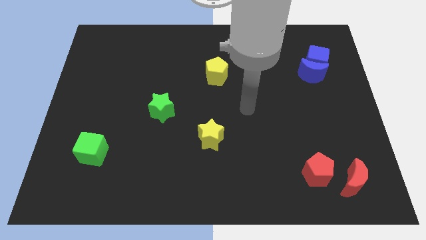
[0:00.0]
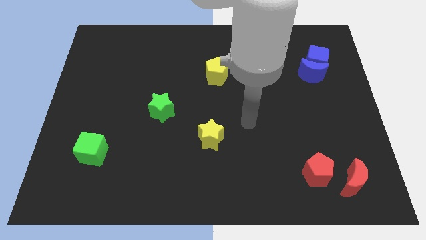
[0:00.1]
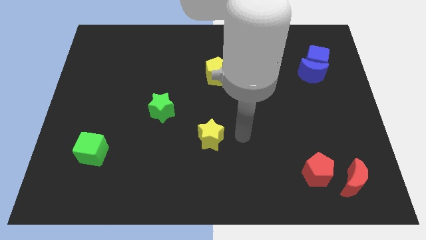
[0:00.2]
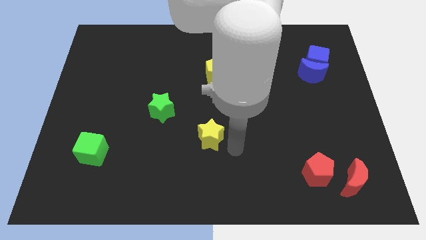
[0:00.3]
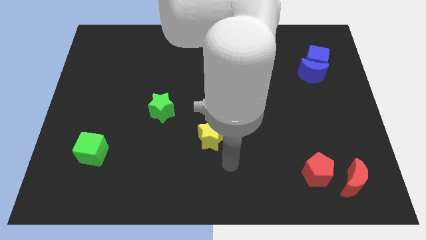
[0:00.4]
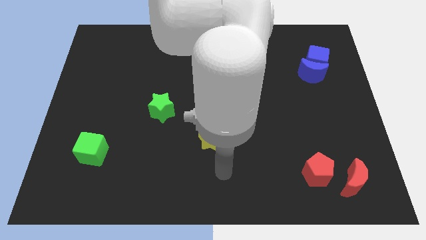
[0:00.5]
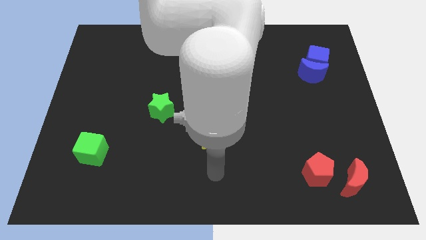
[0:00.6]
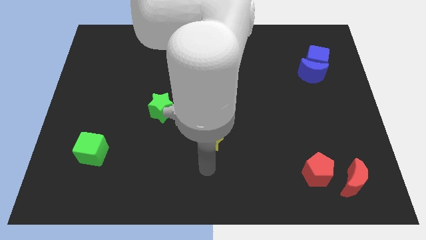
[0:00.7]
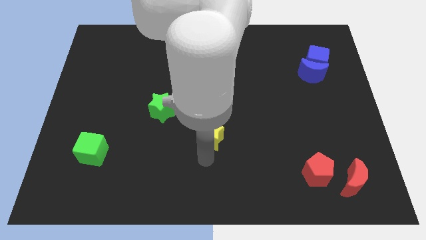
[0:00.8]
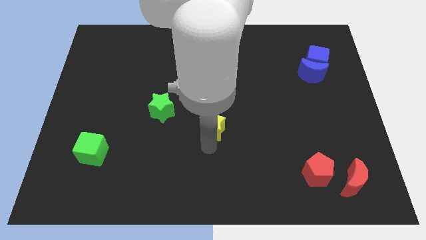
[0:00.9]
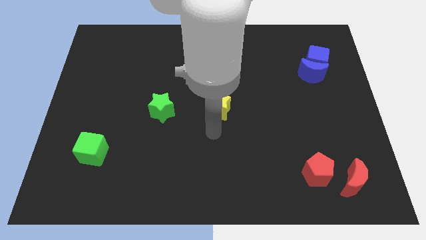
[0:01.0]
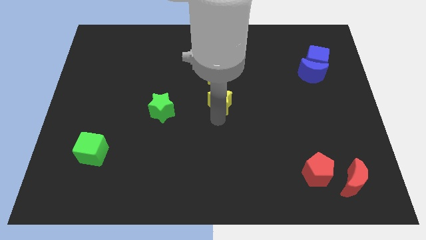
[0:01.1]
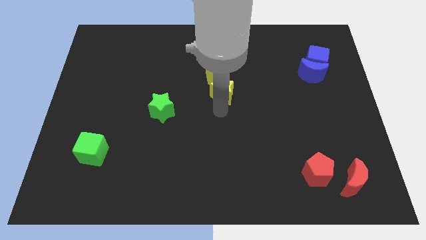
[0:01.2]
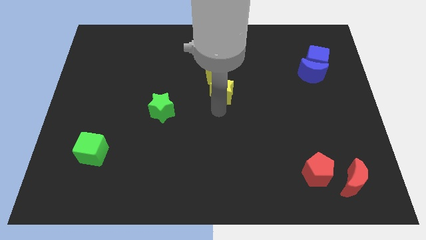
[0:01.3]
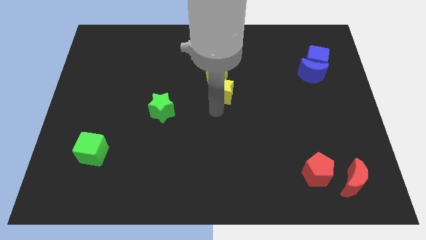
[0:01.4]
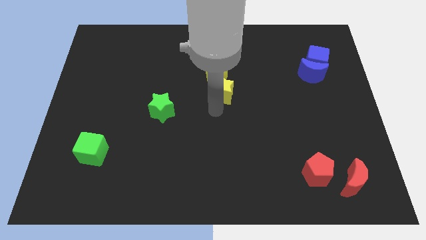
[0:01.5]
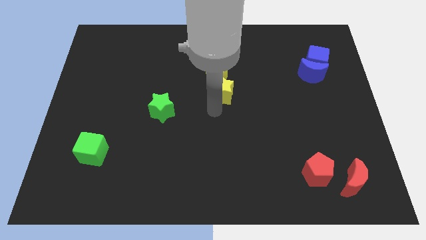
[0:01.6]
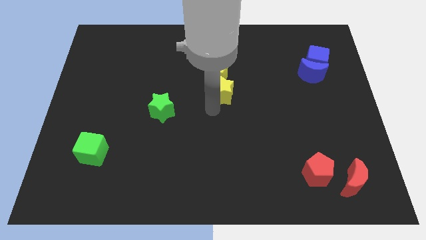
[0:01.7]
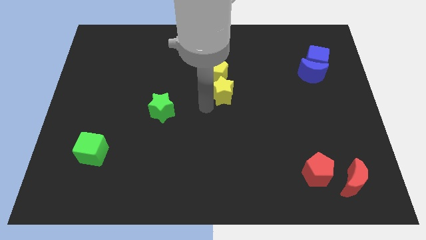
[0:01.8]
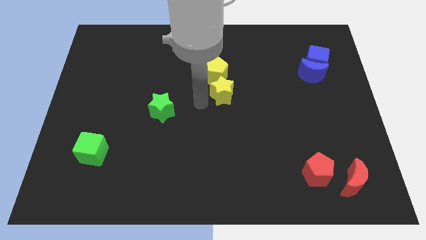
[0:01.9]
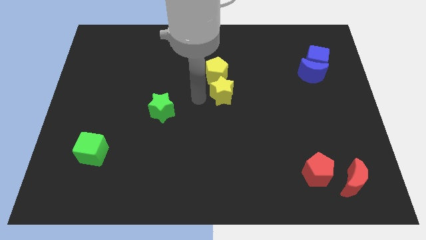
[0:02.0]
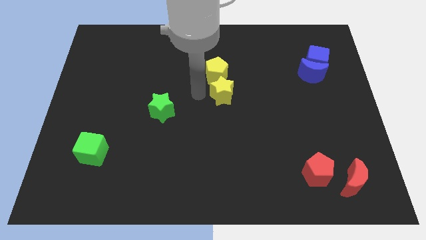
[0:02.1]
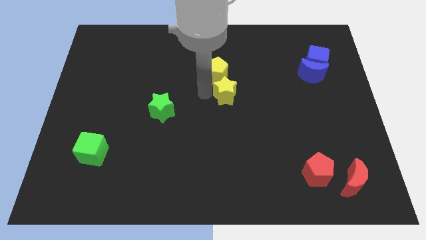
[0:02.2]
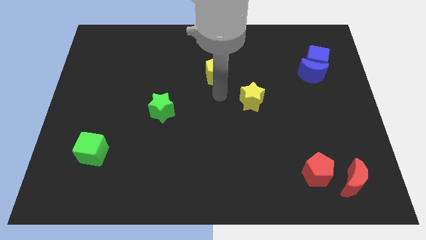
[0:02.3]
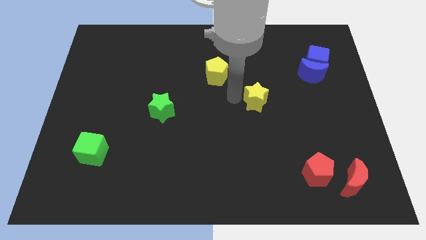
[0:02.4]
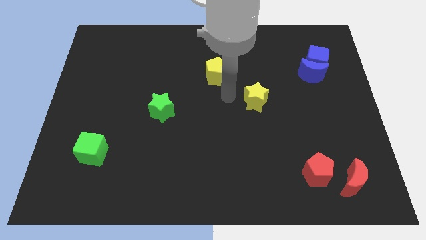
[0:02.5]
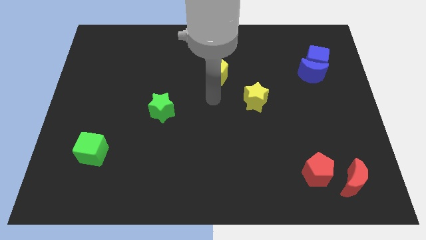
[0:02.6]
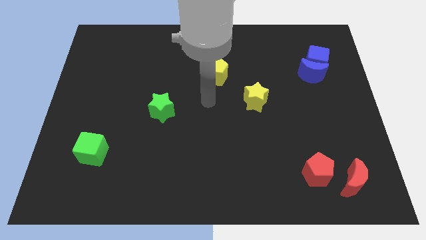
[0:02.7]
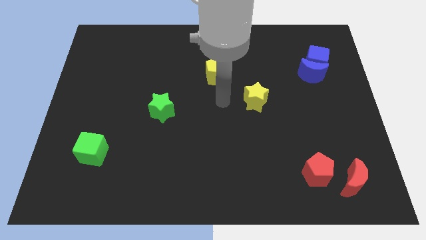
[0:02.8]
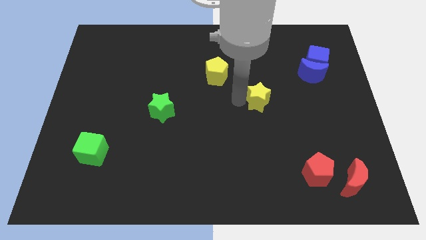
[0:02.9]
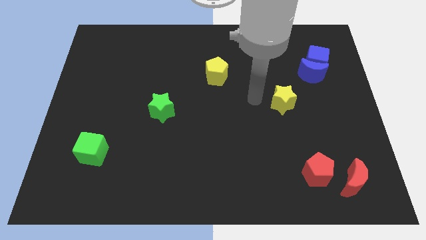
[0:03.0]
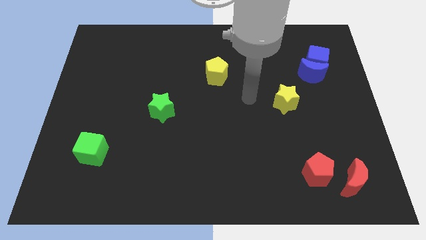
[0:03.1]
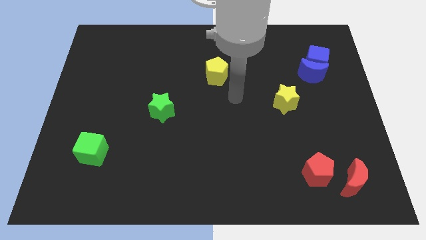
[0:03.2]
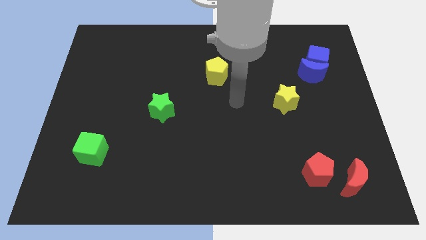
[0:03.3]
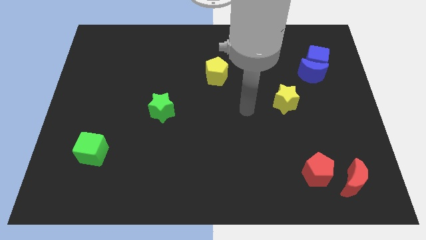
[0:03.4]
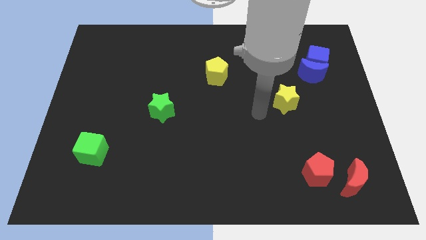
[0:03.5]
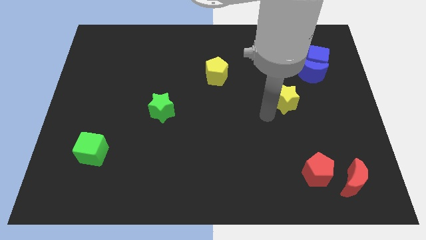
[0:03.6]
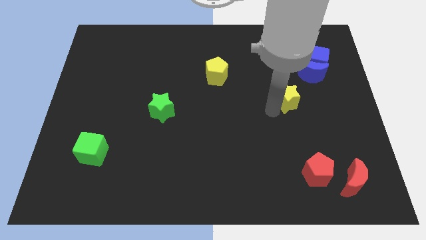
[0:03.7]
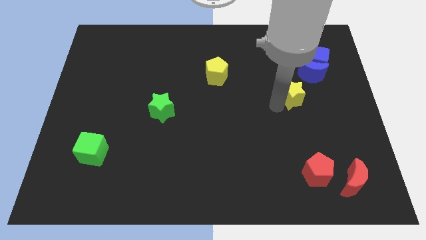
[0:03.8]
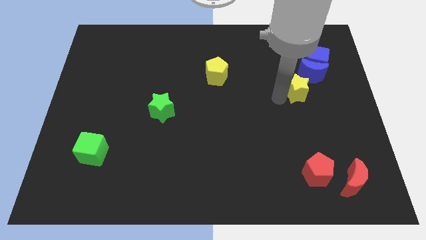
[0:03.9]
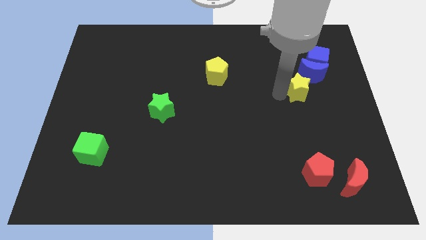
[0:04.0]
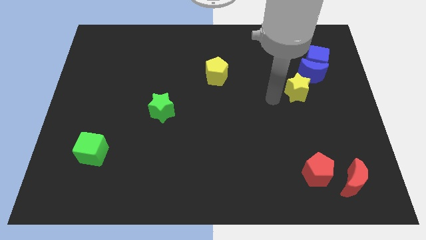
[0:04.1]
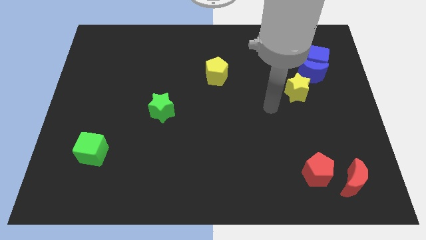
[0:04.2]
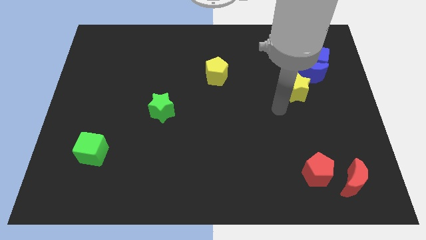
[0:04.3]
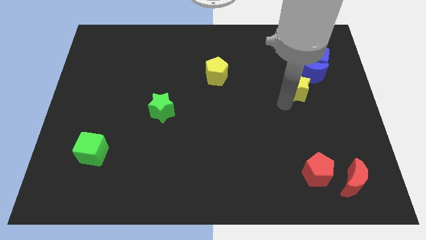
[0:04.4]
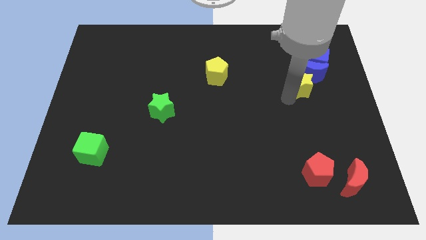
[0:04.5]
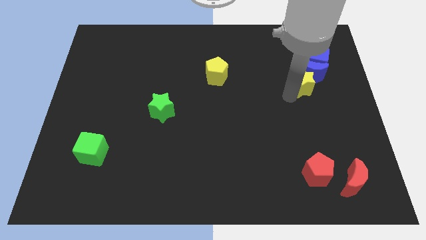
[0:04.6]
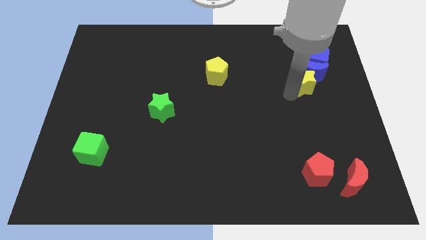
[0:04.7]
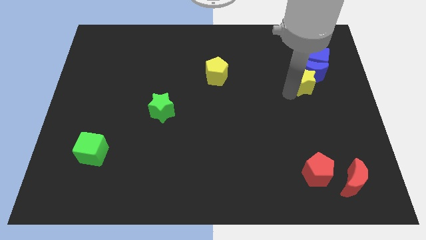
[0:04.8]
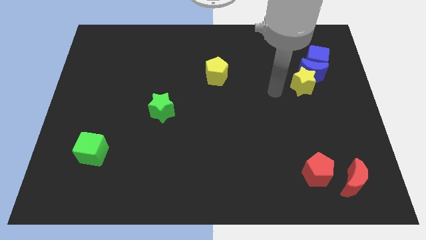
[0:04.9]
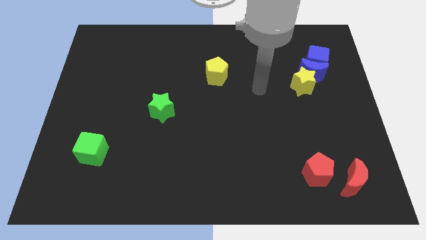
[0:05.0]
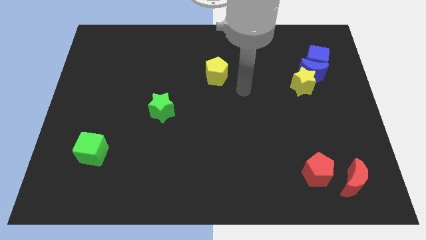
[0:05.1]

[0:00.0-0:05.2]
push the yellow star towards blue crescent

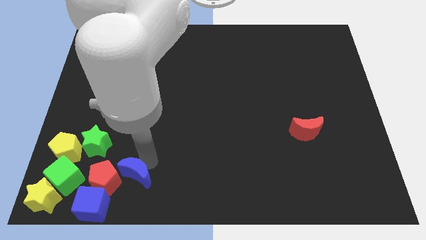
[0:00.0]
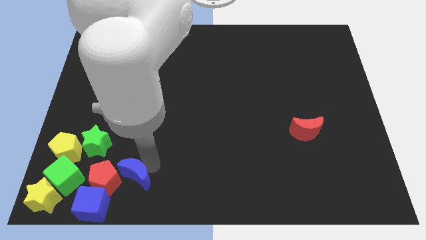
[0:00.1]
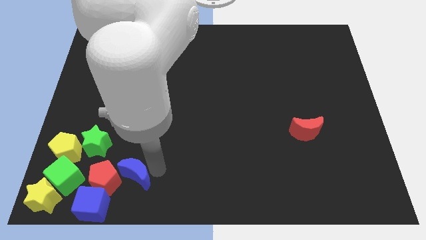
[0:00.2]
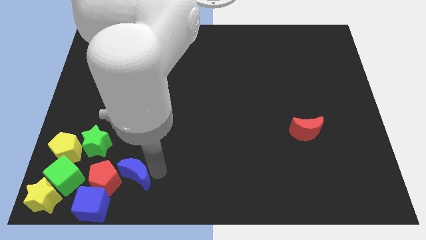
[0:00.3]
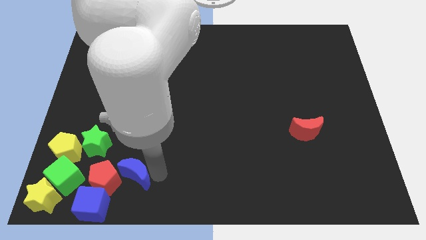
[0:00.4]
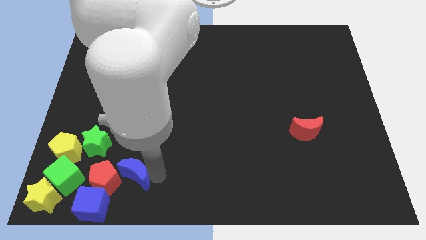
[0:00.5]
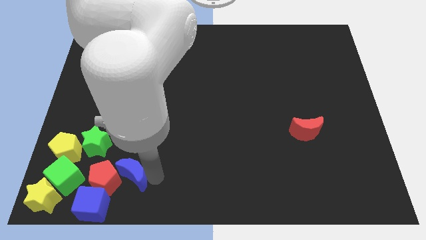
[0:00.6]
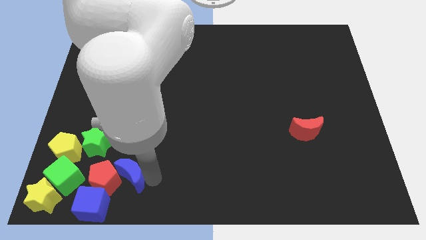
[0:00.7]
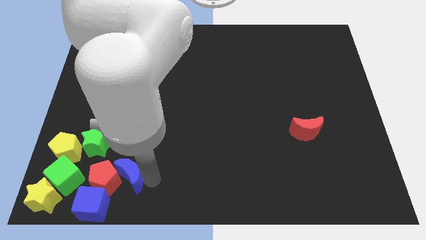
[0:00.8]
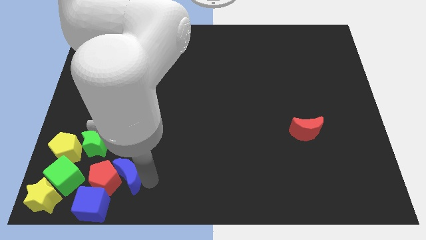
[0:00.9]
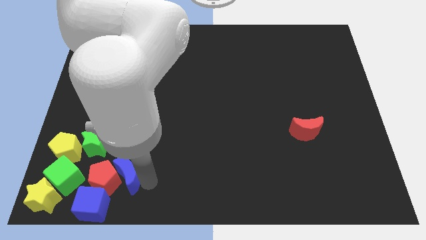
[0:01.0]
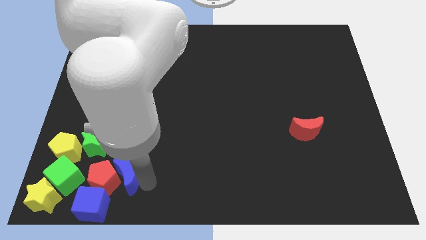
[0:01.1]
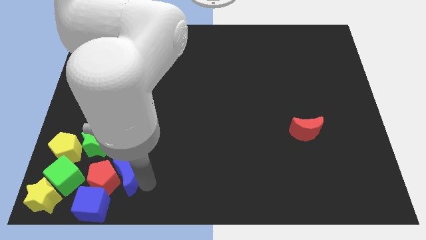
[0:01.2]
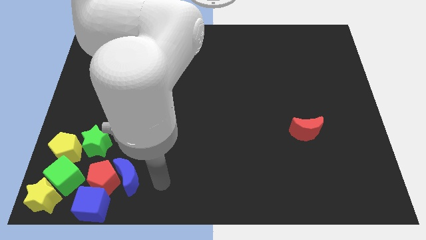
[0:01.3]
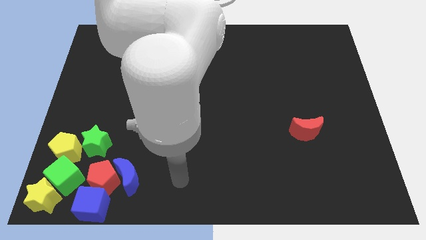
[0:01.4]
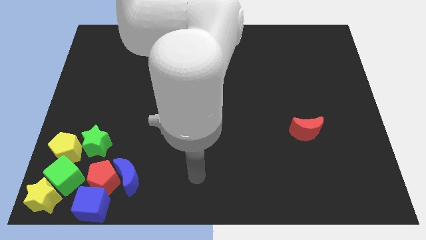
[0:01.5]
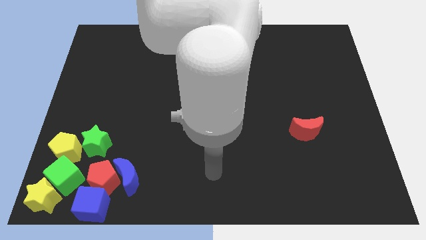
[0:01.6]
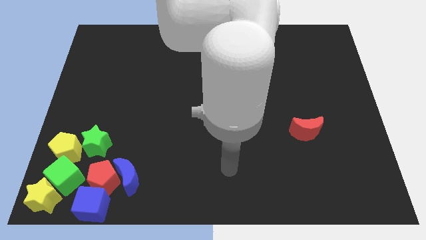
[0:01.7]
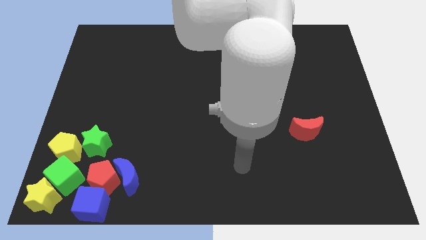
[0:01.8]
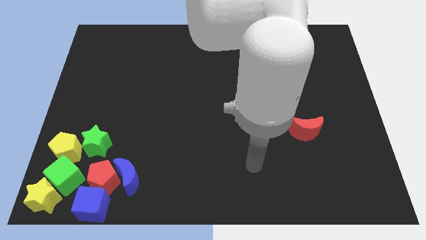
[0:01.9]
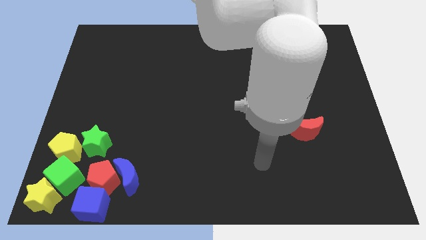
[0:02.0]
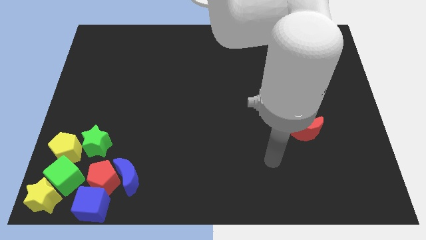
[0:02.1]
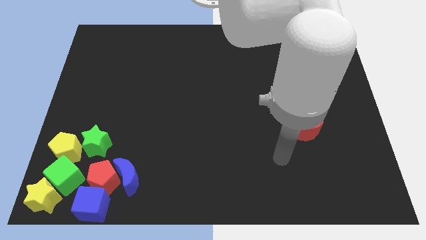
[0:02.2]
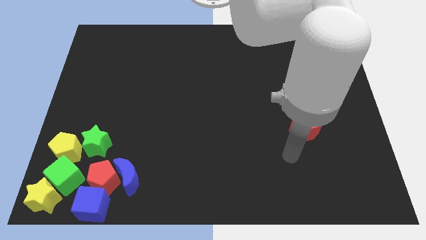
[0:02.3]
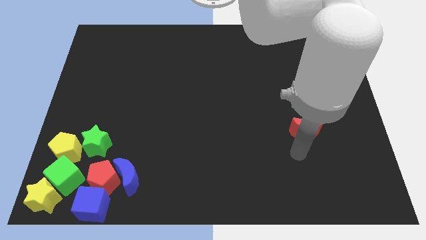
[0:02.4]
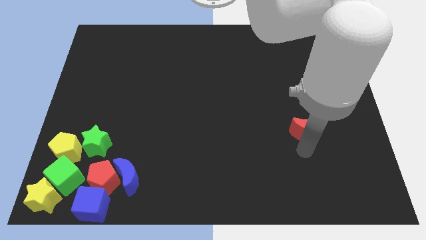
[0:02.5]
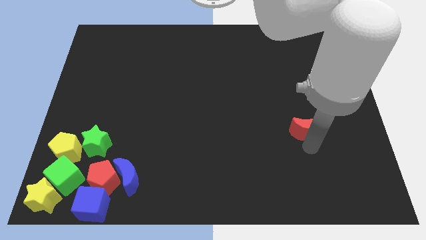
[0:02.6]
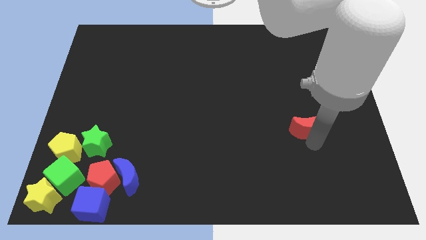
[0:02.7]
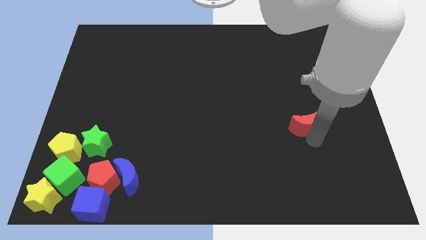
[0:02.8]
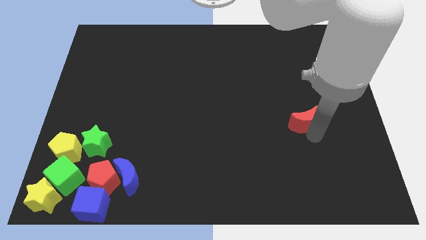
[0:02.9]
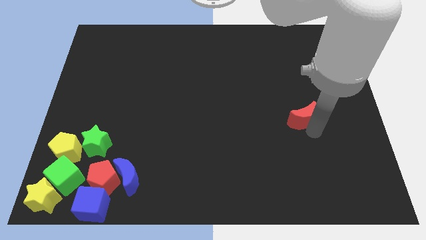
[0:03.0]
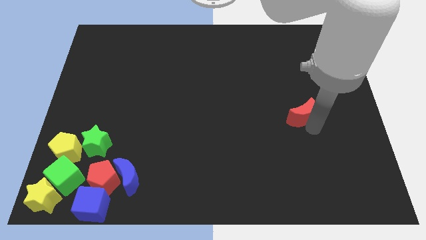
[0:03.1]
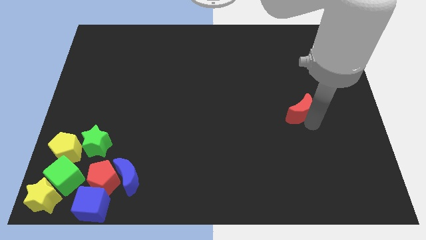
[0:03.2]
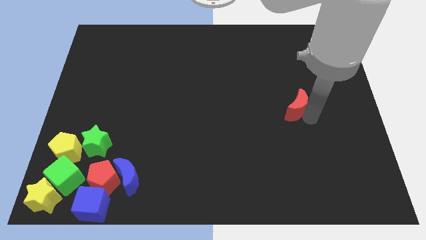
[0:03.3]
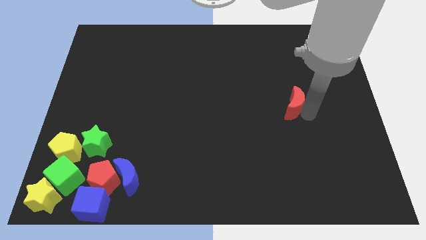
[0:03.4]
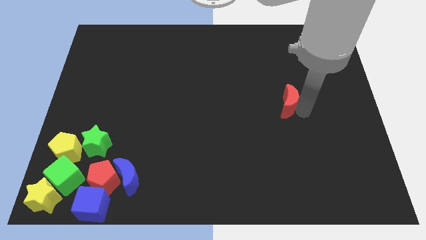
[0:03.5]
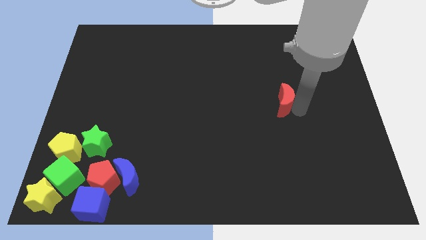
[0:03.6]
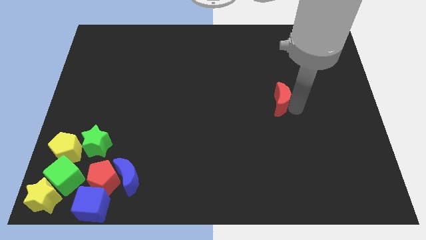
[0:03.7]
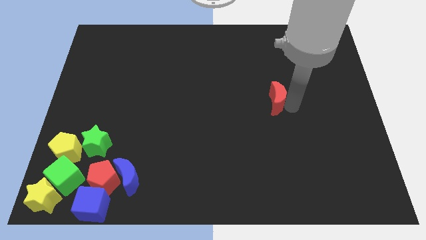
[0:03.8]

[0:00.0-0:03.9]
place your arm at right side of the red moon
